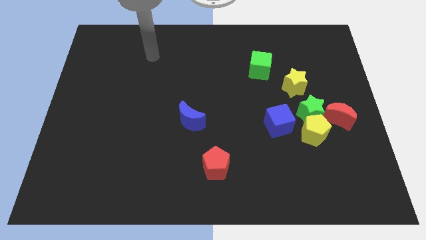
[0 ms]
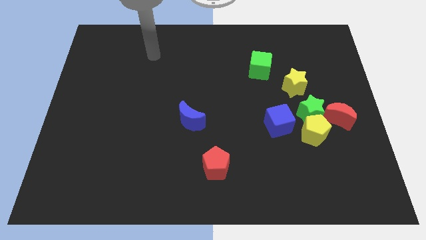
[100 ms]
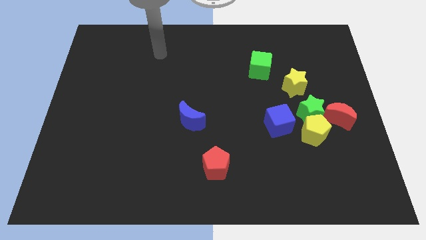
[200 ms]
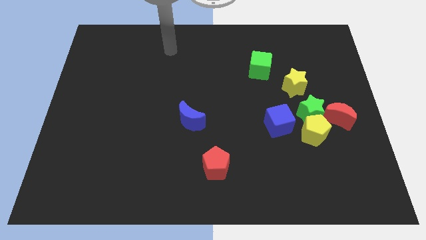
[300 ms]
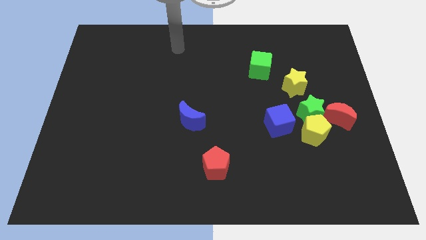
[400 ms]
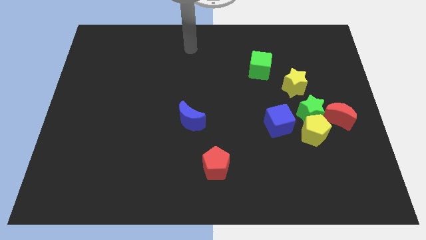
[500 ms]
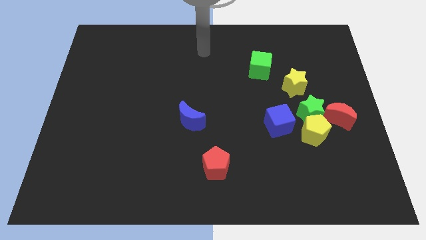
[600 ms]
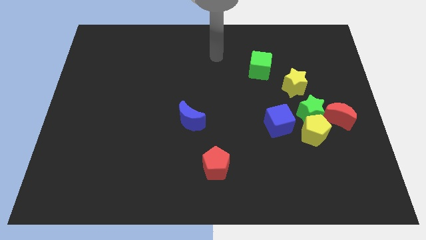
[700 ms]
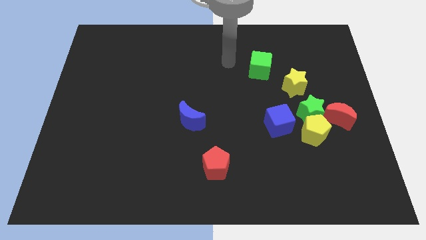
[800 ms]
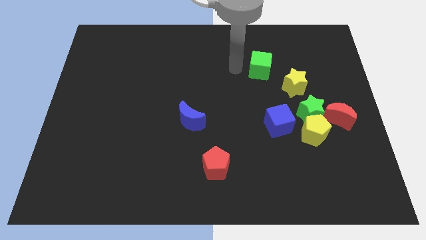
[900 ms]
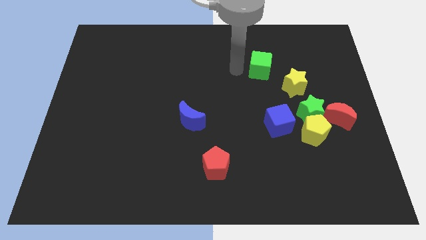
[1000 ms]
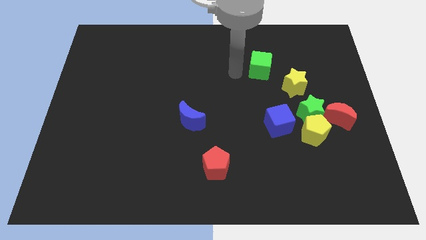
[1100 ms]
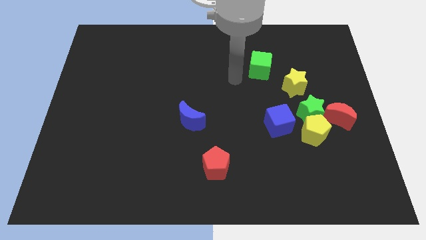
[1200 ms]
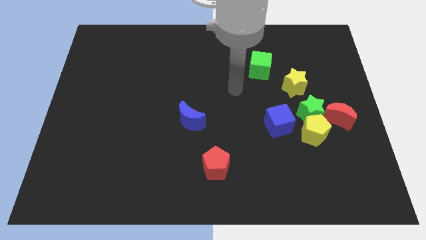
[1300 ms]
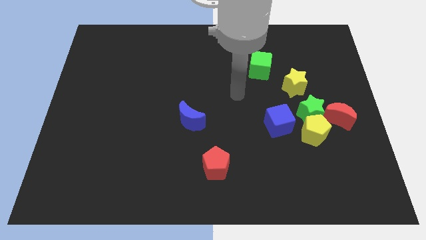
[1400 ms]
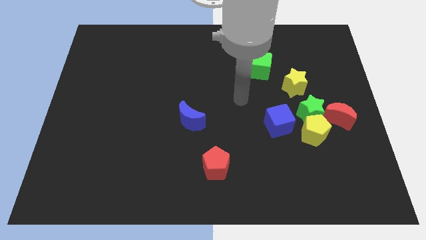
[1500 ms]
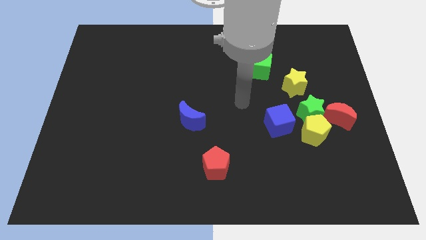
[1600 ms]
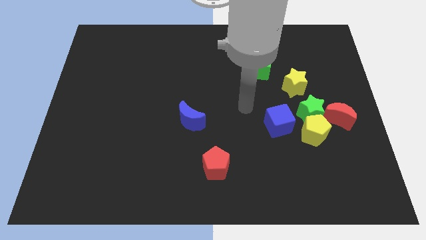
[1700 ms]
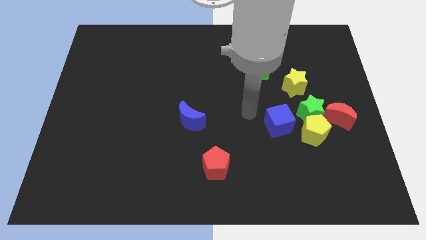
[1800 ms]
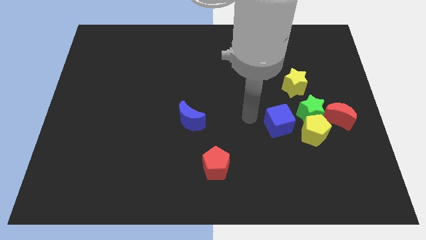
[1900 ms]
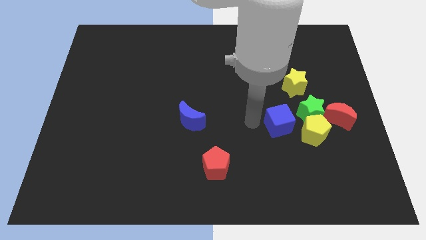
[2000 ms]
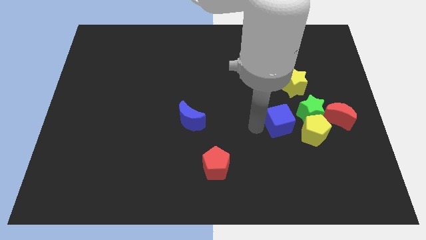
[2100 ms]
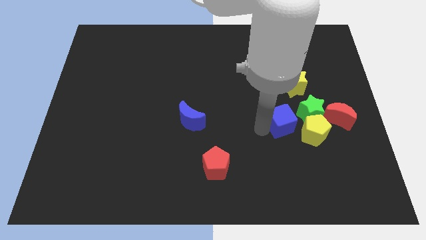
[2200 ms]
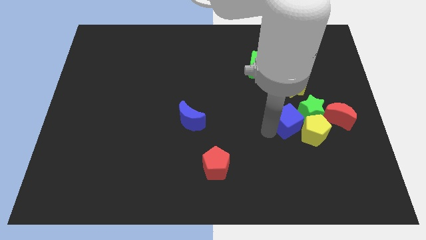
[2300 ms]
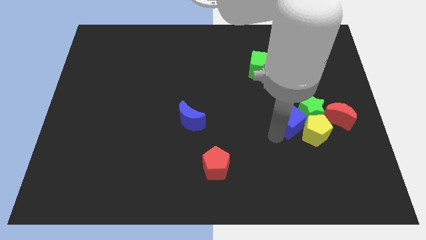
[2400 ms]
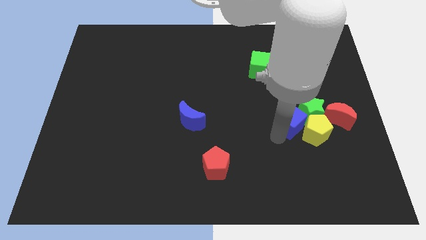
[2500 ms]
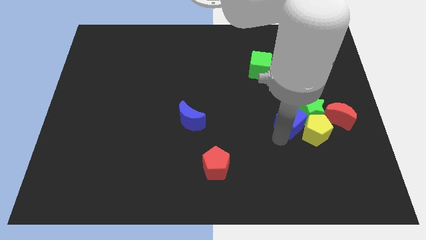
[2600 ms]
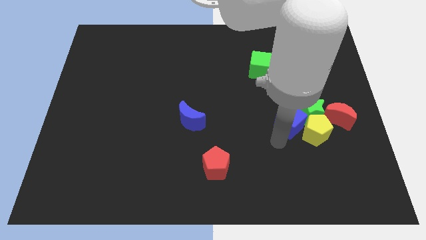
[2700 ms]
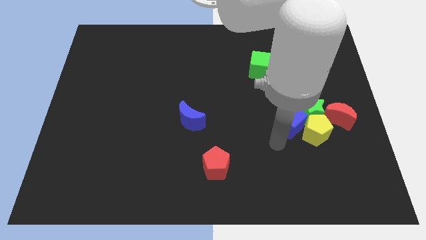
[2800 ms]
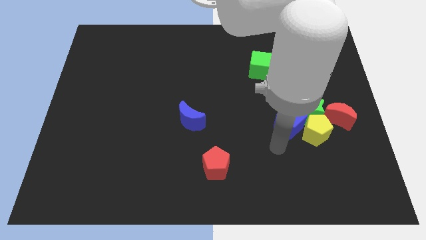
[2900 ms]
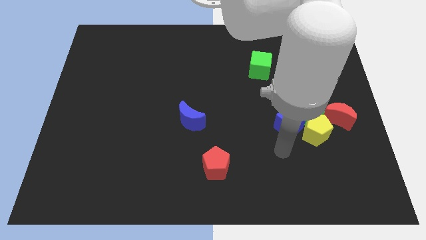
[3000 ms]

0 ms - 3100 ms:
point your arm below blue cube

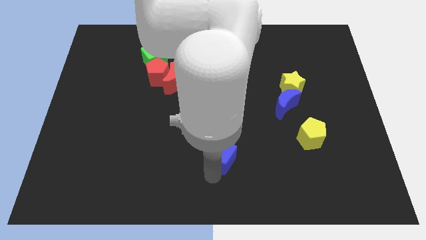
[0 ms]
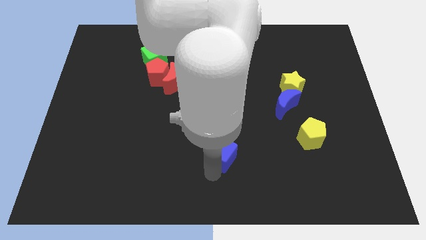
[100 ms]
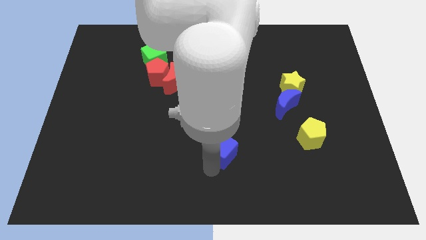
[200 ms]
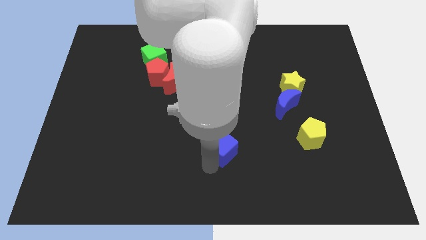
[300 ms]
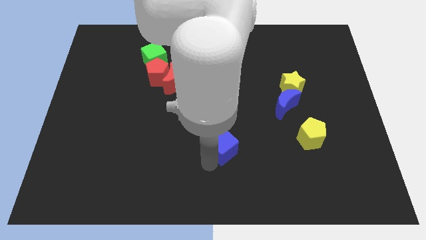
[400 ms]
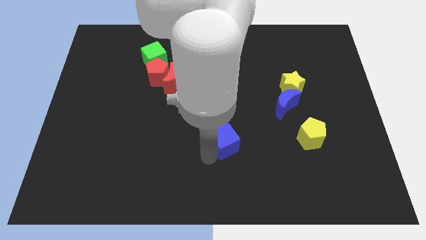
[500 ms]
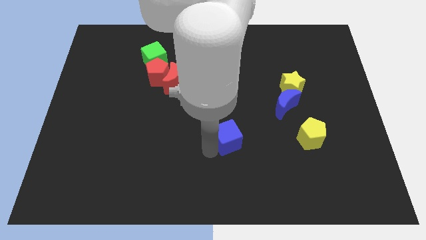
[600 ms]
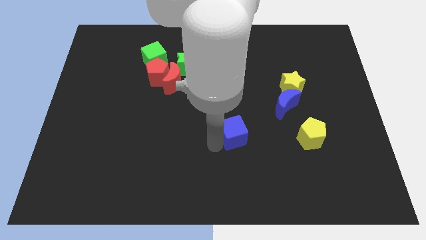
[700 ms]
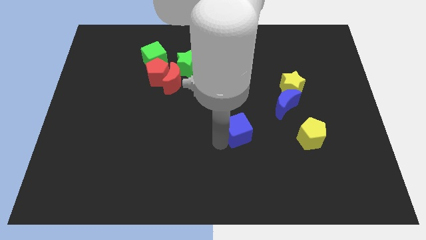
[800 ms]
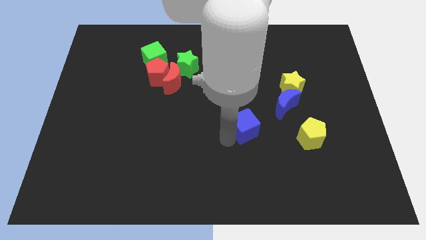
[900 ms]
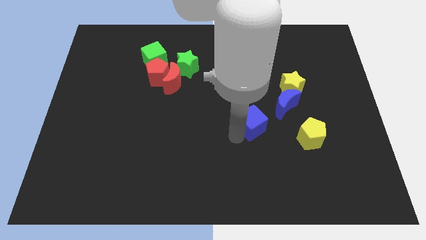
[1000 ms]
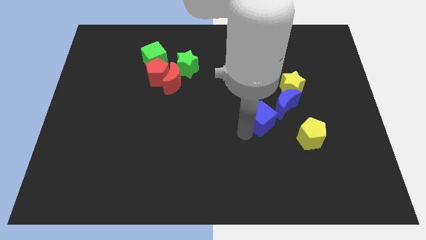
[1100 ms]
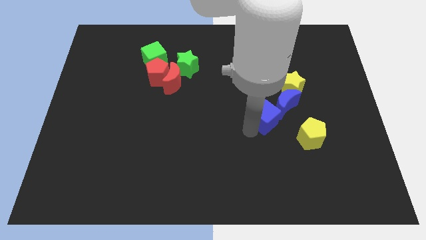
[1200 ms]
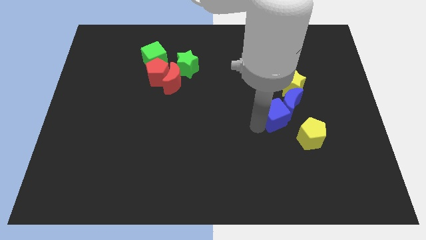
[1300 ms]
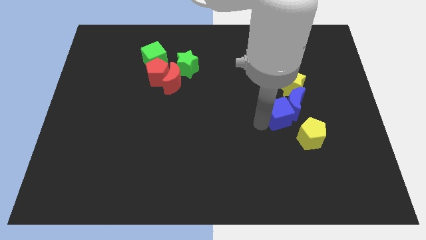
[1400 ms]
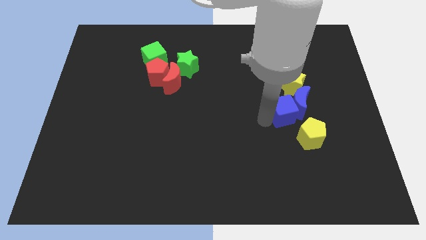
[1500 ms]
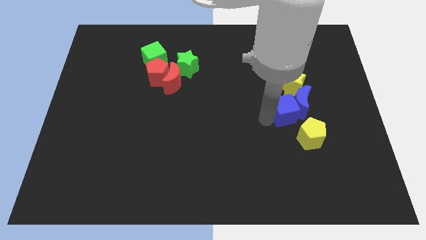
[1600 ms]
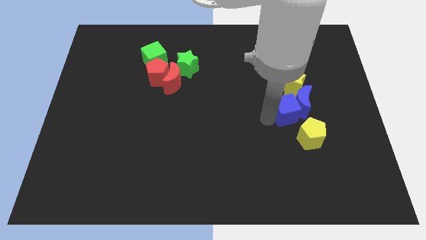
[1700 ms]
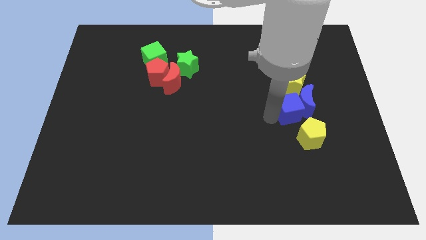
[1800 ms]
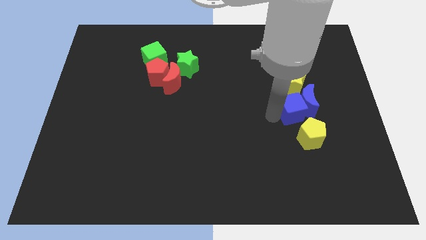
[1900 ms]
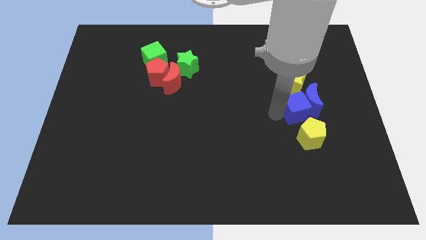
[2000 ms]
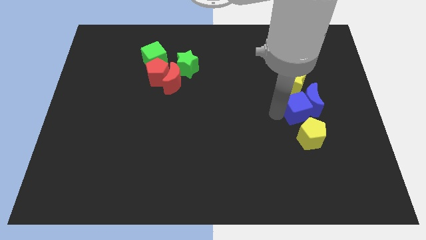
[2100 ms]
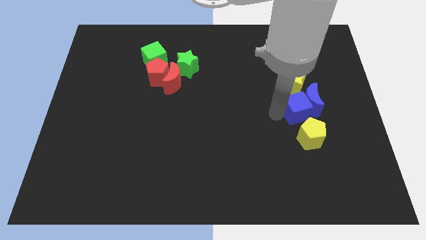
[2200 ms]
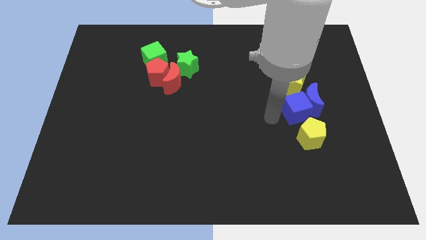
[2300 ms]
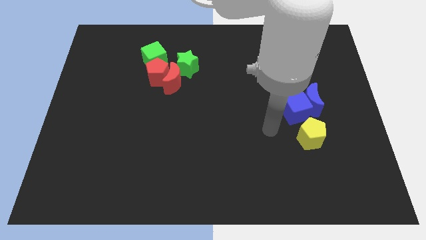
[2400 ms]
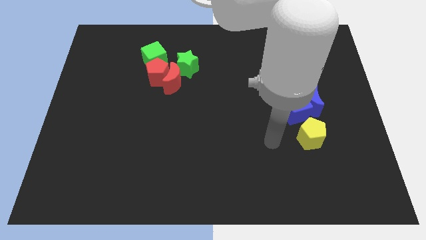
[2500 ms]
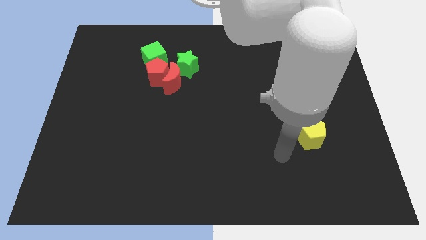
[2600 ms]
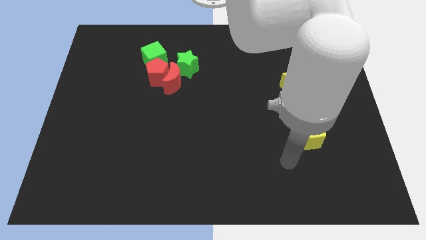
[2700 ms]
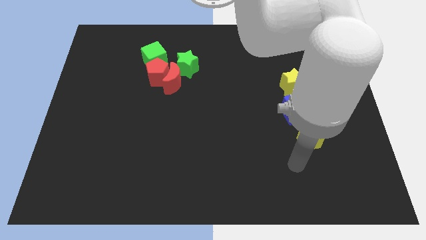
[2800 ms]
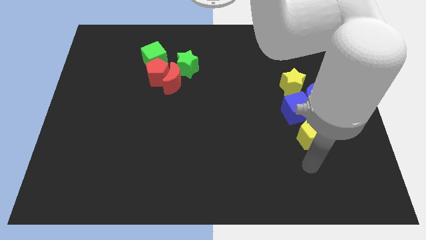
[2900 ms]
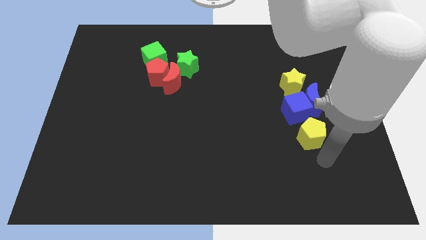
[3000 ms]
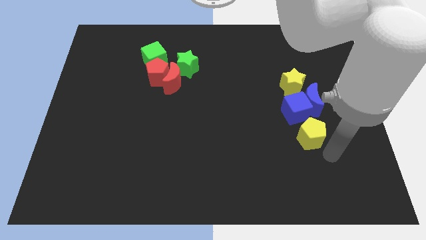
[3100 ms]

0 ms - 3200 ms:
push the blue cube into the blue moon

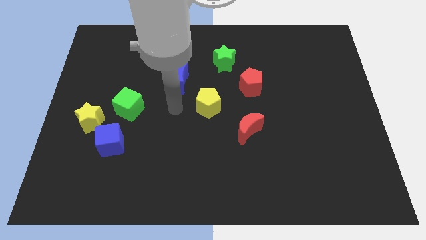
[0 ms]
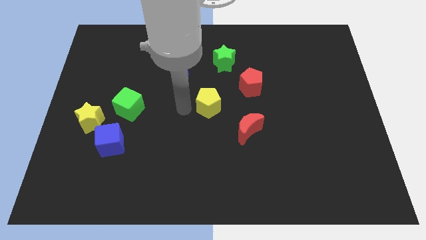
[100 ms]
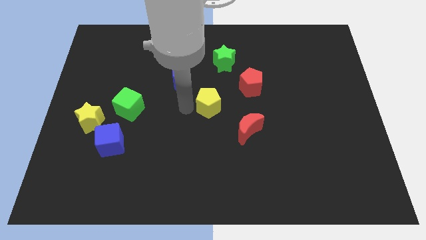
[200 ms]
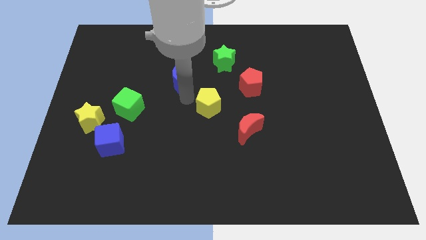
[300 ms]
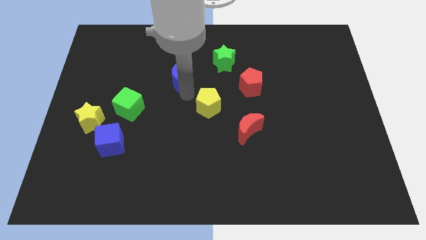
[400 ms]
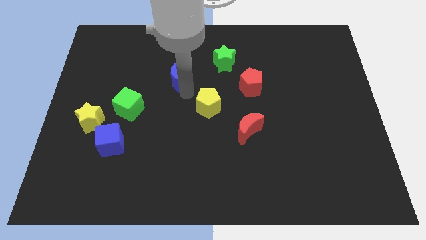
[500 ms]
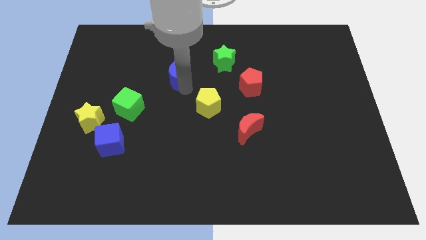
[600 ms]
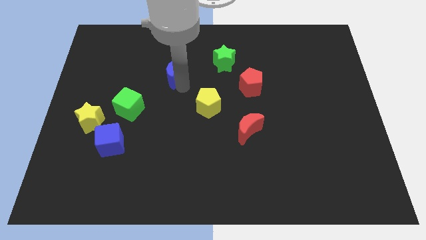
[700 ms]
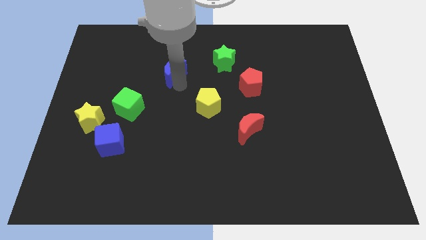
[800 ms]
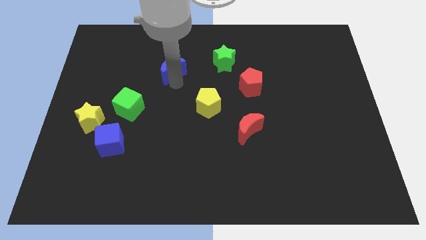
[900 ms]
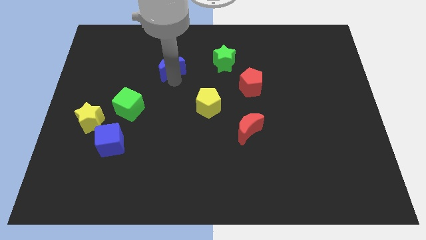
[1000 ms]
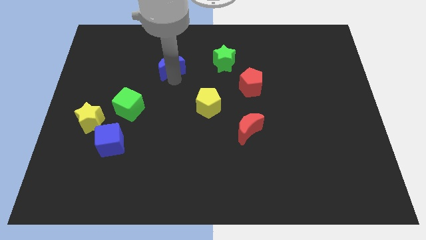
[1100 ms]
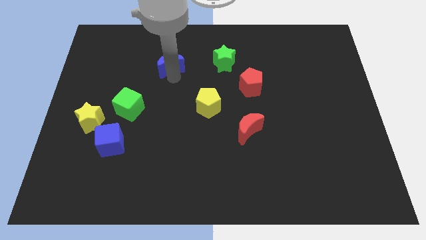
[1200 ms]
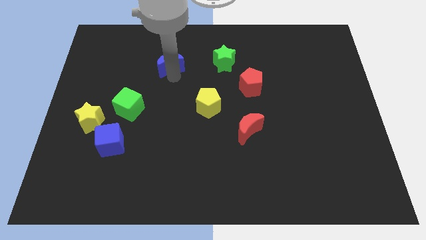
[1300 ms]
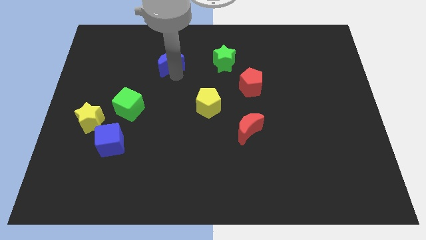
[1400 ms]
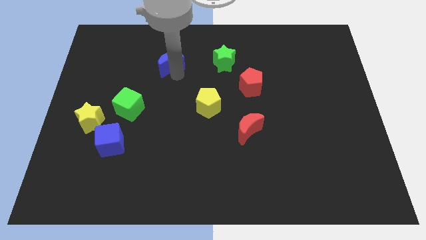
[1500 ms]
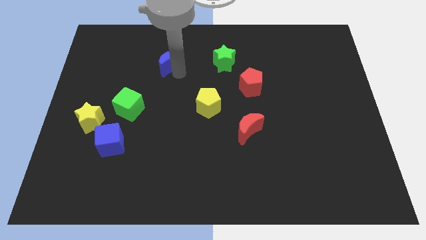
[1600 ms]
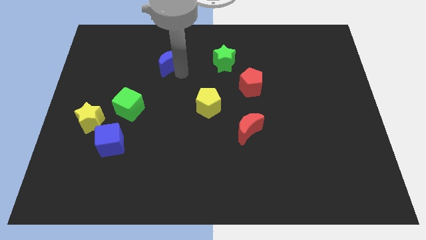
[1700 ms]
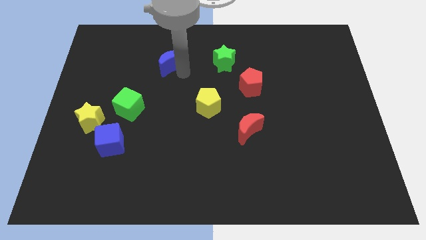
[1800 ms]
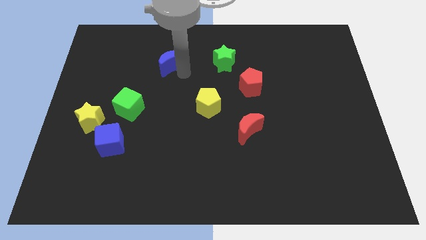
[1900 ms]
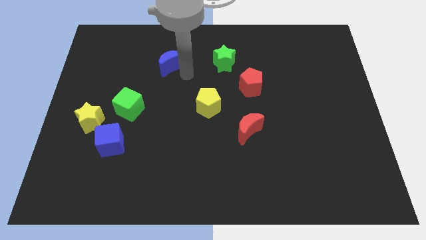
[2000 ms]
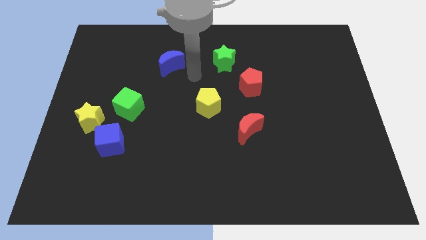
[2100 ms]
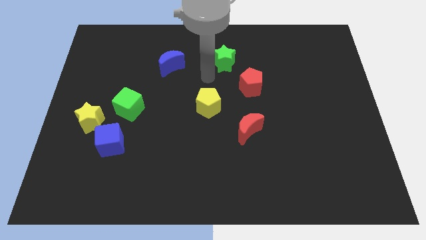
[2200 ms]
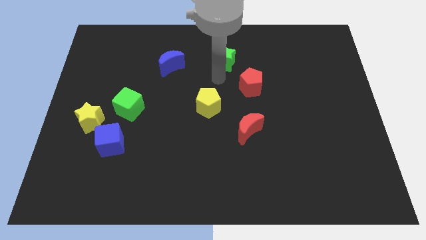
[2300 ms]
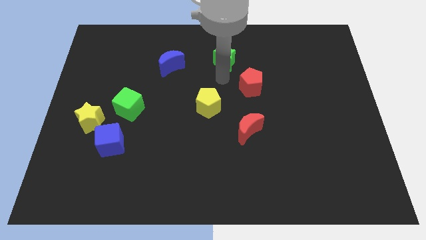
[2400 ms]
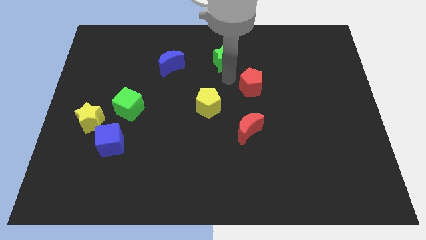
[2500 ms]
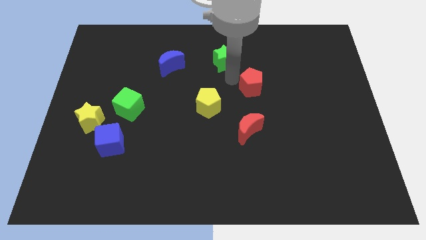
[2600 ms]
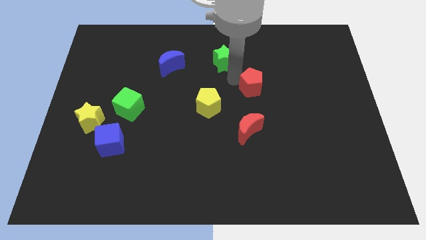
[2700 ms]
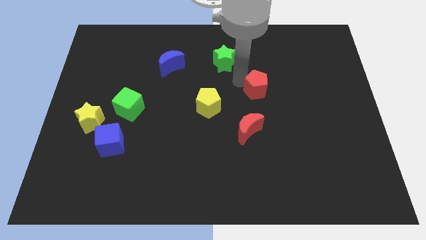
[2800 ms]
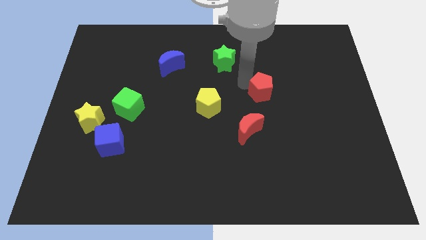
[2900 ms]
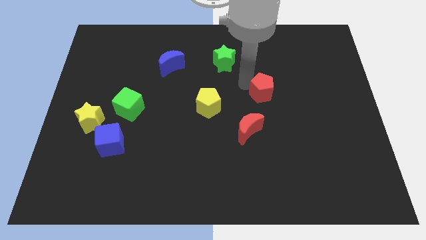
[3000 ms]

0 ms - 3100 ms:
move the blue moon to the left of the green star
